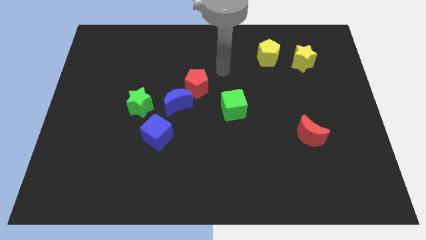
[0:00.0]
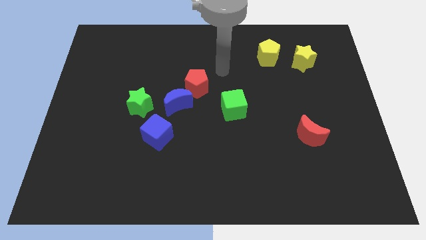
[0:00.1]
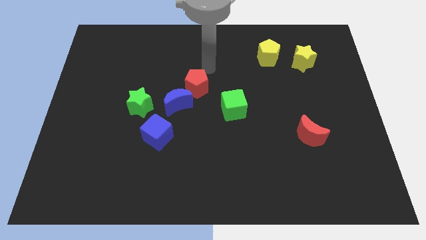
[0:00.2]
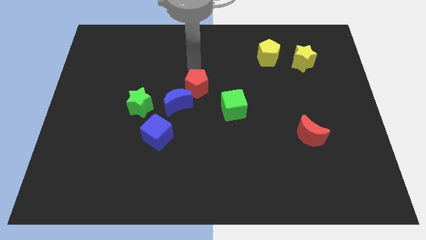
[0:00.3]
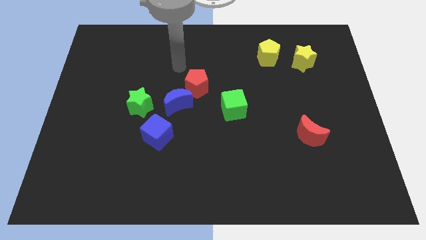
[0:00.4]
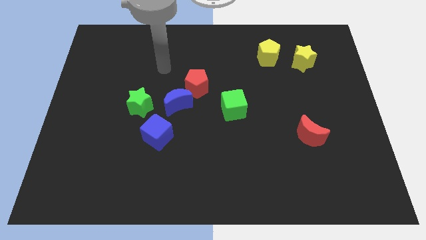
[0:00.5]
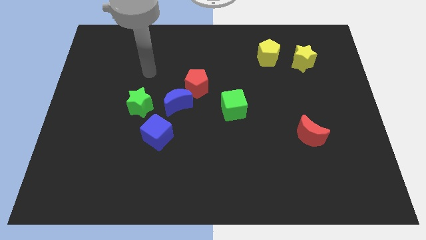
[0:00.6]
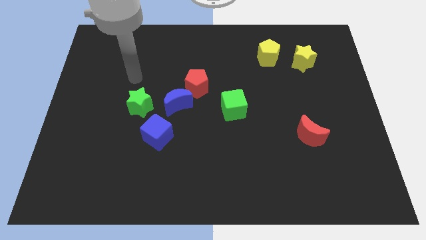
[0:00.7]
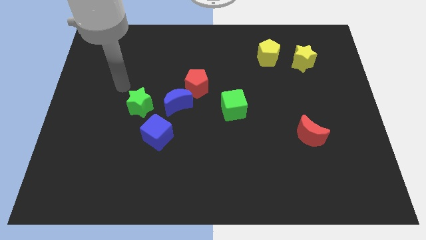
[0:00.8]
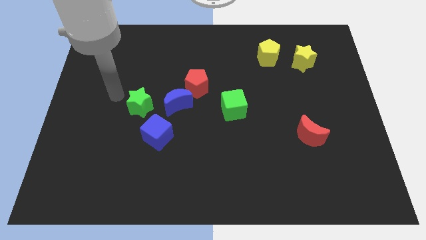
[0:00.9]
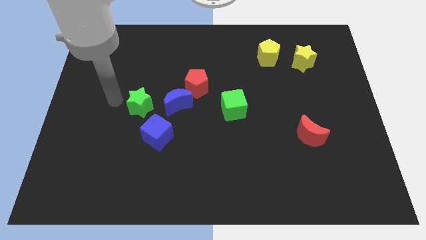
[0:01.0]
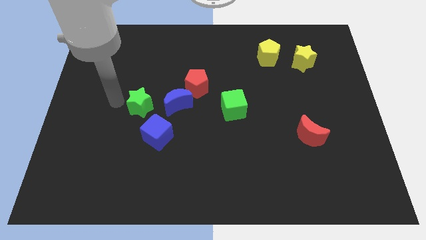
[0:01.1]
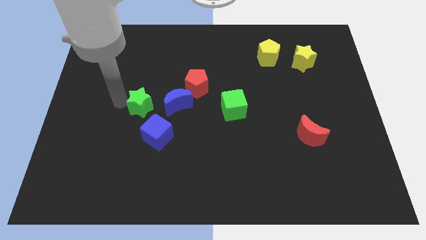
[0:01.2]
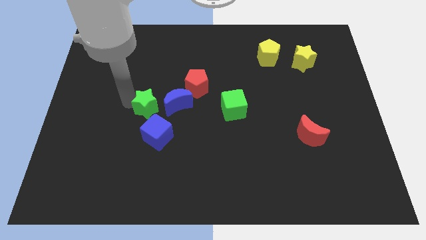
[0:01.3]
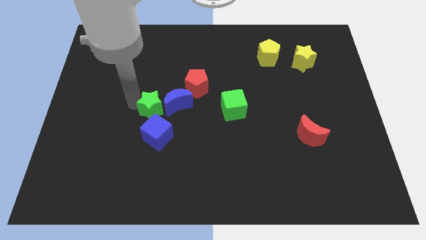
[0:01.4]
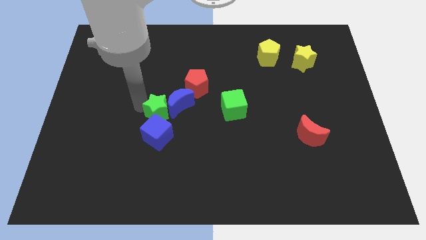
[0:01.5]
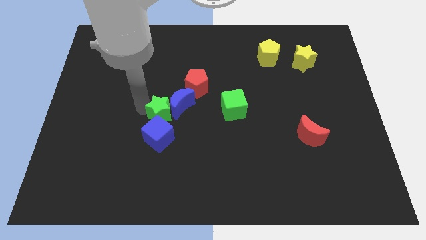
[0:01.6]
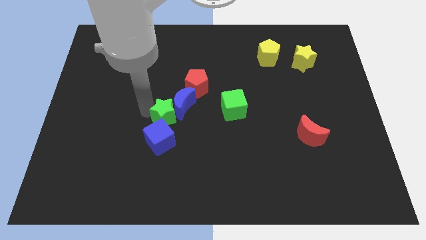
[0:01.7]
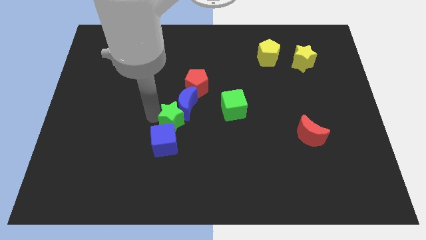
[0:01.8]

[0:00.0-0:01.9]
push the green star between the blue moon and blue cube

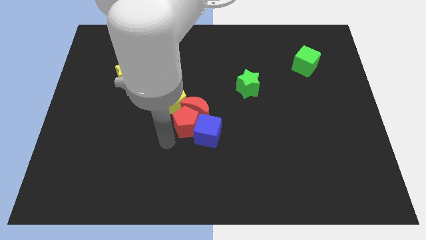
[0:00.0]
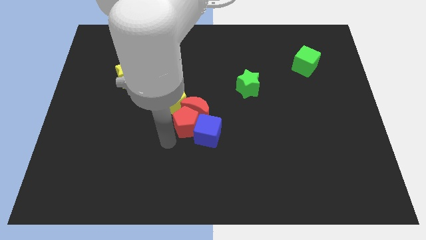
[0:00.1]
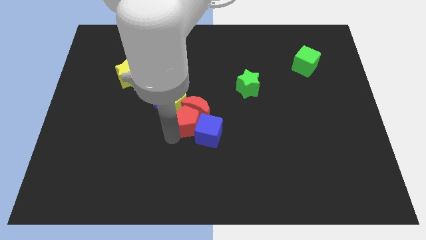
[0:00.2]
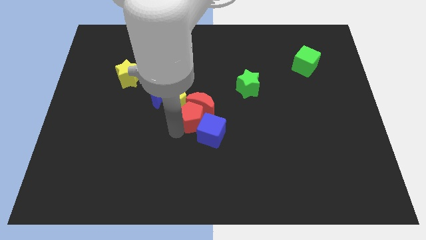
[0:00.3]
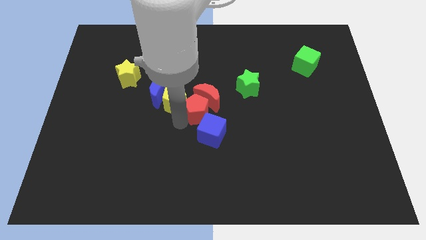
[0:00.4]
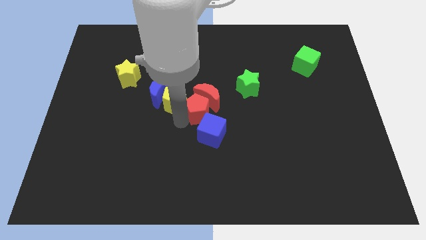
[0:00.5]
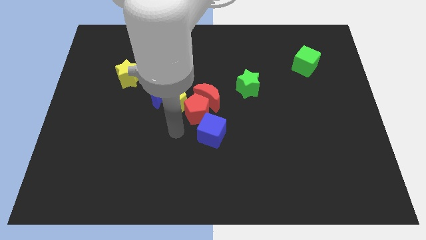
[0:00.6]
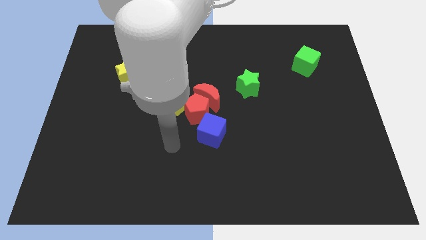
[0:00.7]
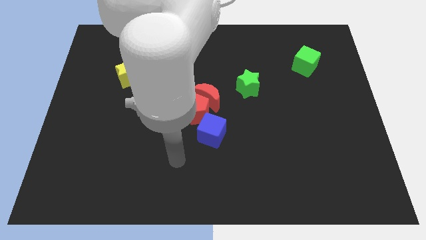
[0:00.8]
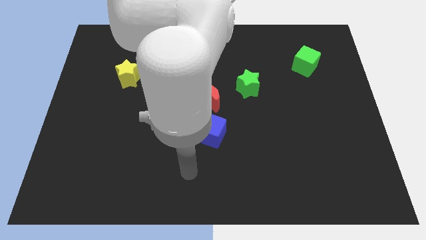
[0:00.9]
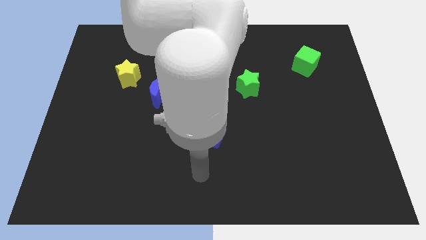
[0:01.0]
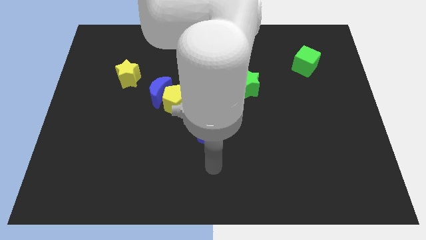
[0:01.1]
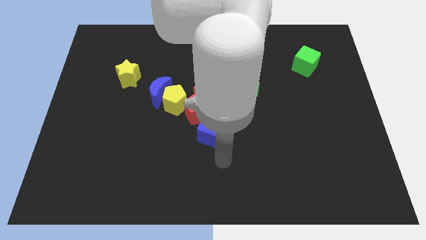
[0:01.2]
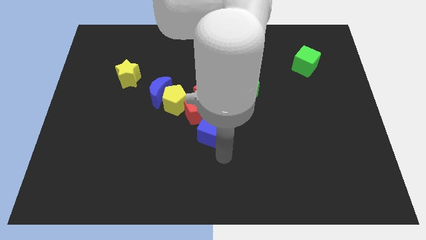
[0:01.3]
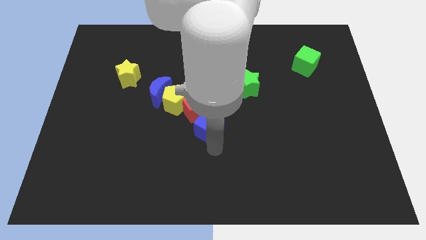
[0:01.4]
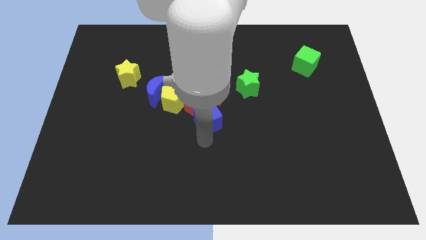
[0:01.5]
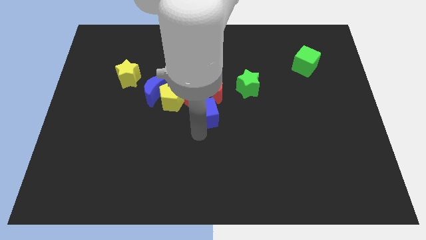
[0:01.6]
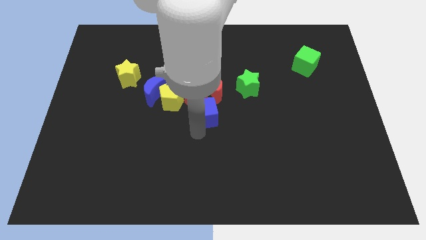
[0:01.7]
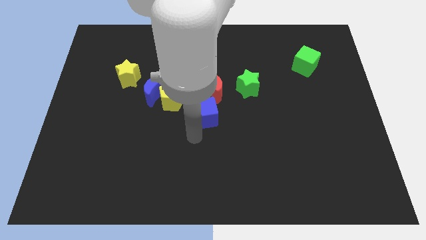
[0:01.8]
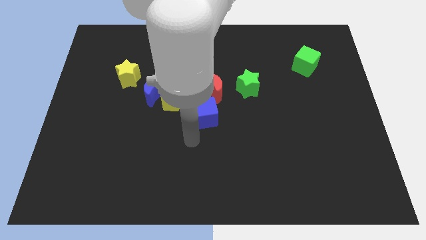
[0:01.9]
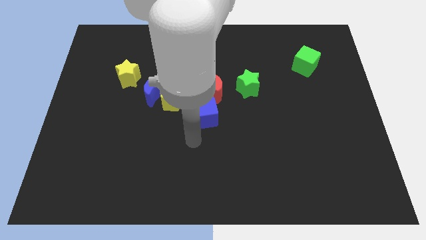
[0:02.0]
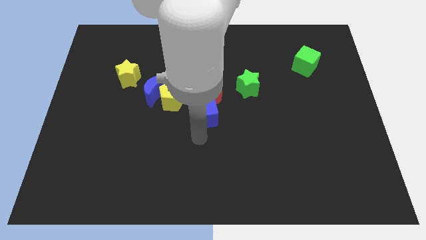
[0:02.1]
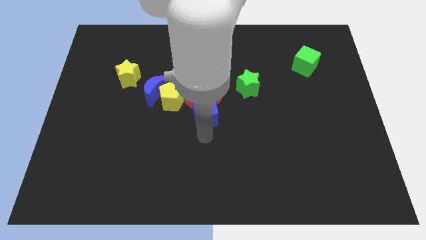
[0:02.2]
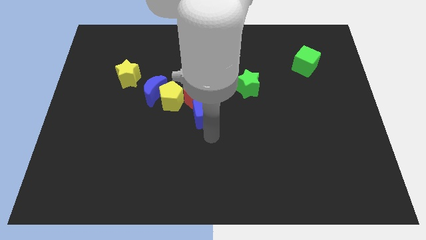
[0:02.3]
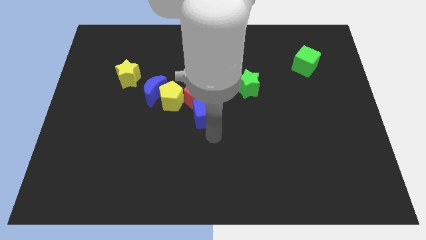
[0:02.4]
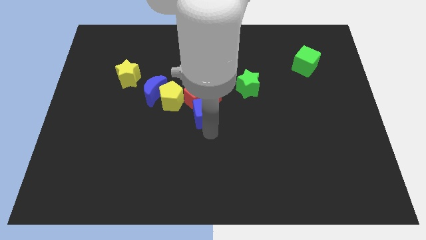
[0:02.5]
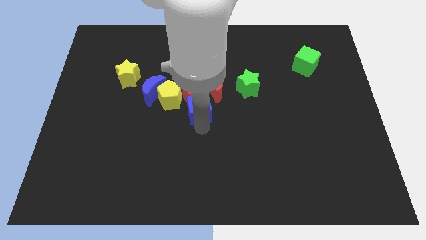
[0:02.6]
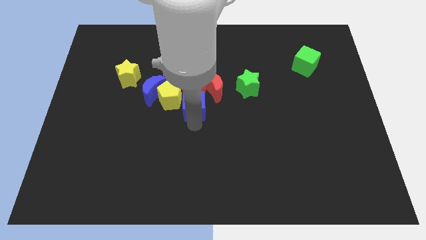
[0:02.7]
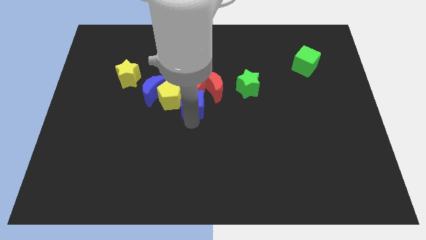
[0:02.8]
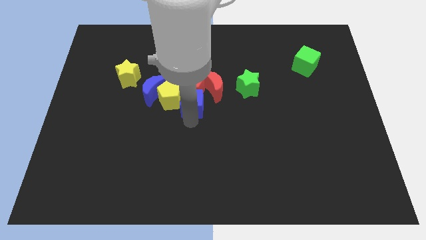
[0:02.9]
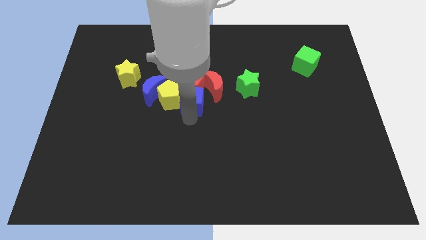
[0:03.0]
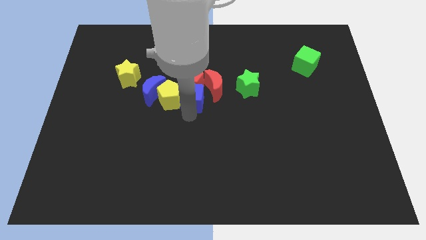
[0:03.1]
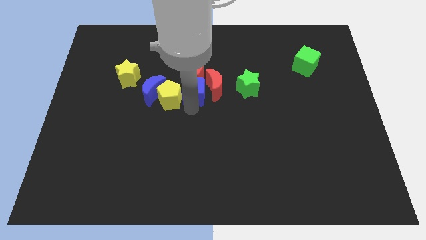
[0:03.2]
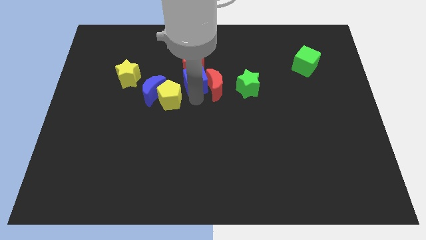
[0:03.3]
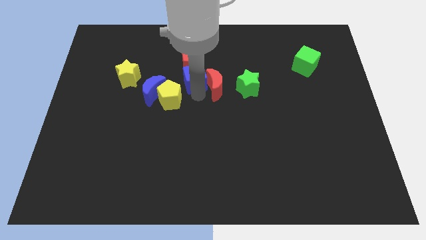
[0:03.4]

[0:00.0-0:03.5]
move the blue cube and the red pentagon slightly towards top

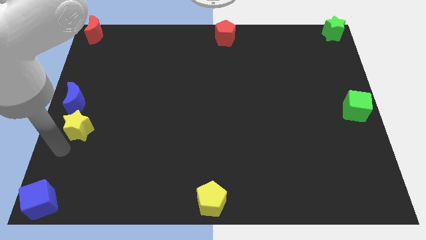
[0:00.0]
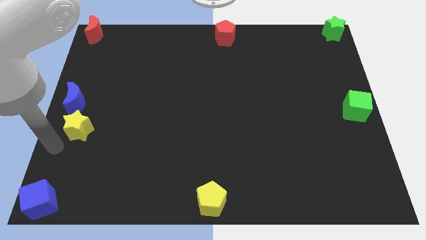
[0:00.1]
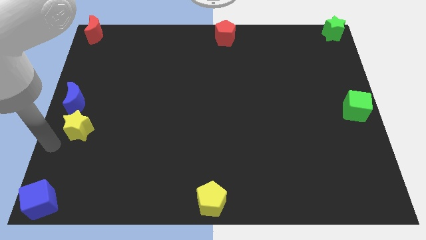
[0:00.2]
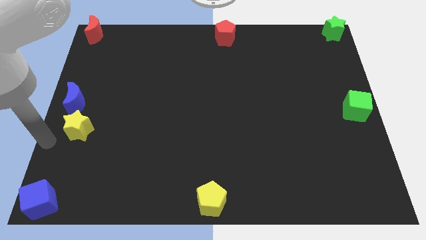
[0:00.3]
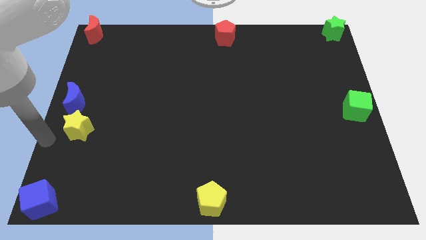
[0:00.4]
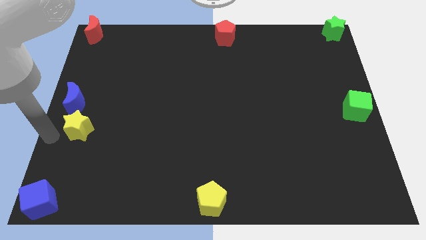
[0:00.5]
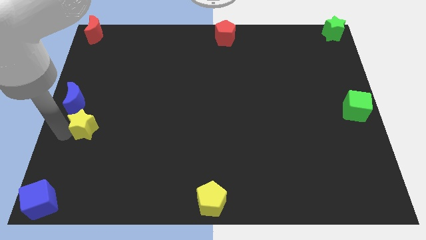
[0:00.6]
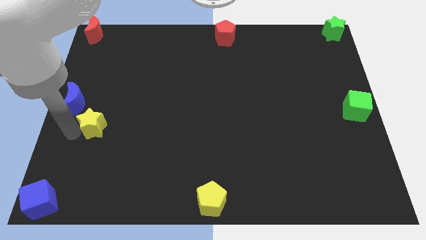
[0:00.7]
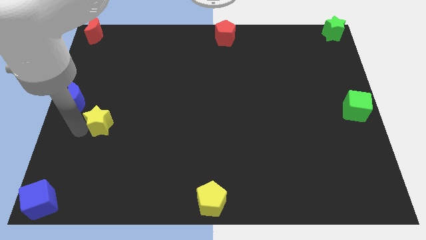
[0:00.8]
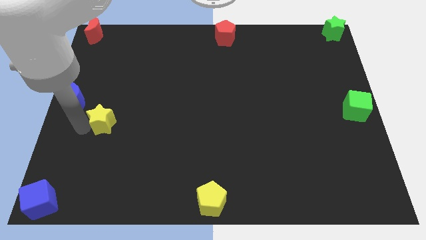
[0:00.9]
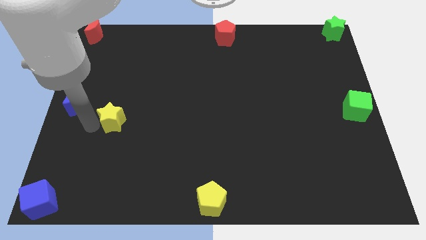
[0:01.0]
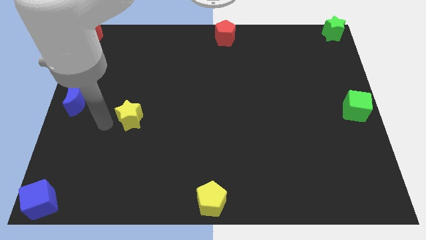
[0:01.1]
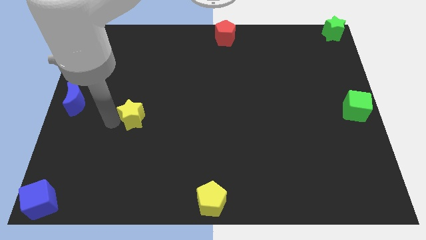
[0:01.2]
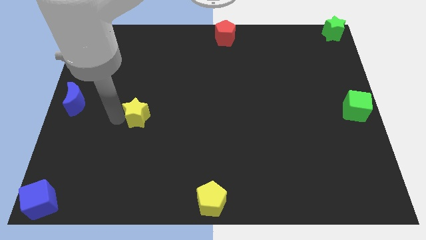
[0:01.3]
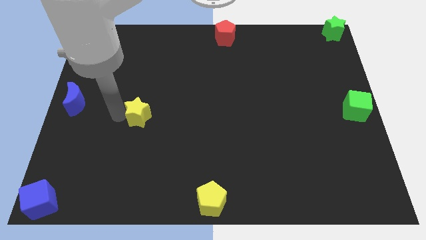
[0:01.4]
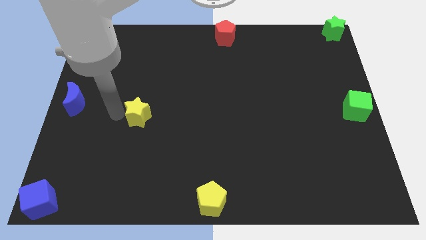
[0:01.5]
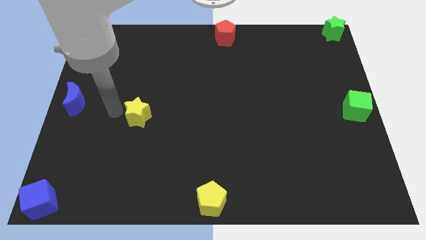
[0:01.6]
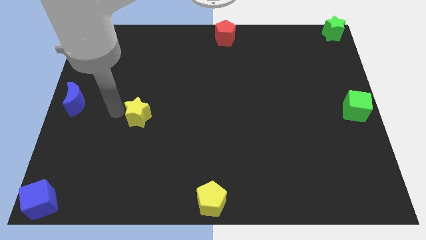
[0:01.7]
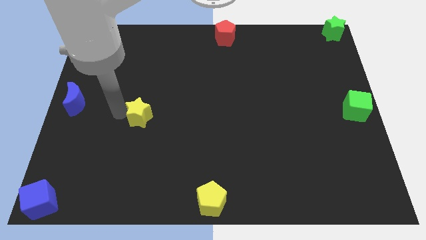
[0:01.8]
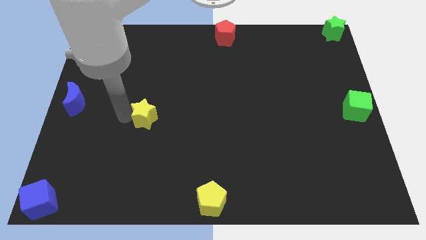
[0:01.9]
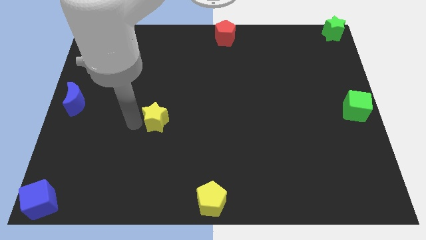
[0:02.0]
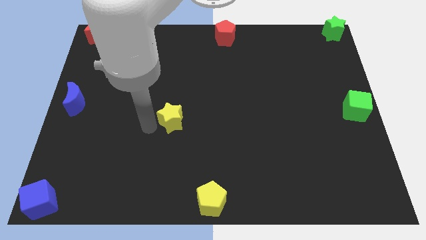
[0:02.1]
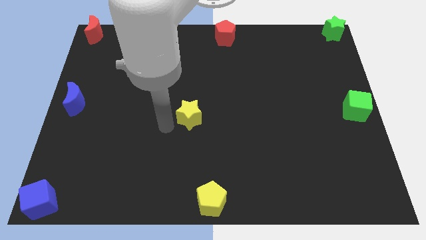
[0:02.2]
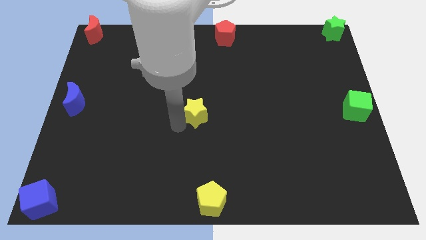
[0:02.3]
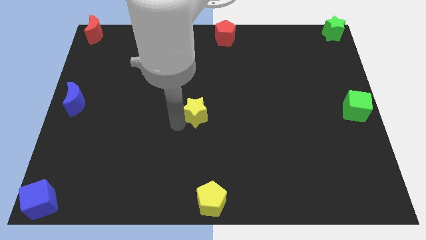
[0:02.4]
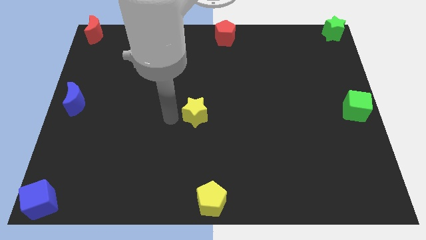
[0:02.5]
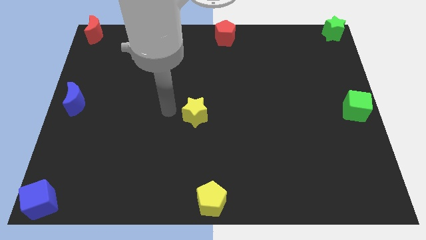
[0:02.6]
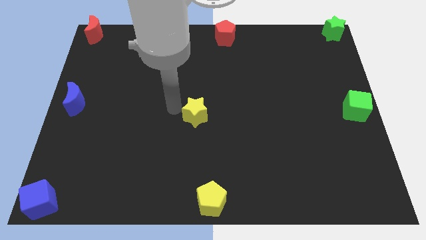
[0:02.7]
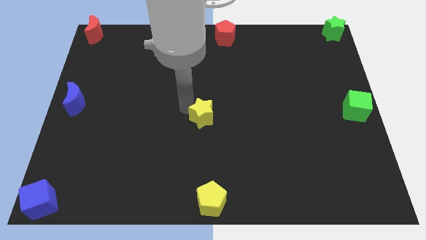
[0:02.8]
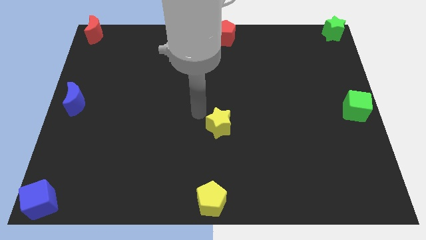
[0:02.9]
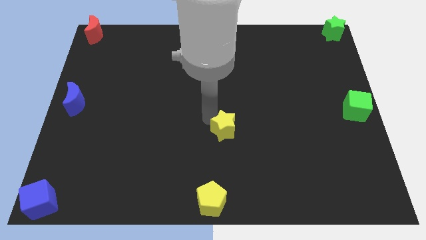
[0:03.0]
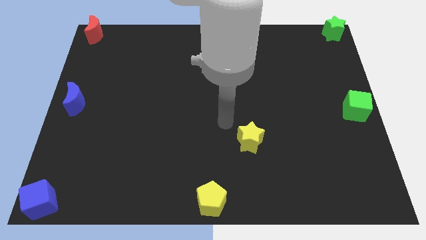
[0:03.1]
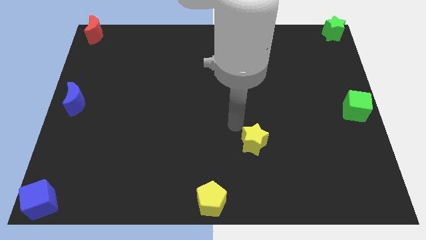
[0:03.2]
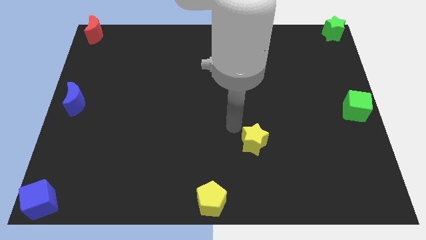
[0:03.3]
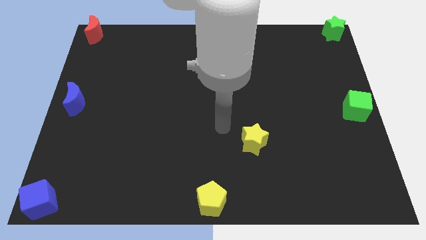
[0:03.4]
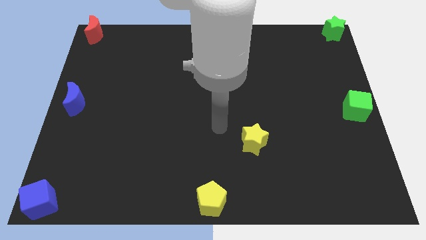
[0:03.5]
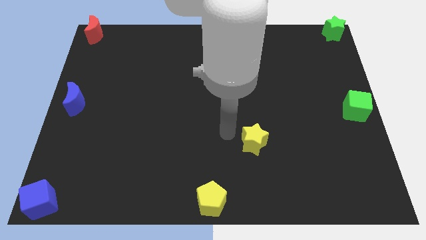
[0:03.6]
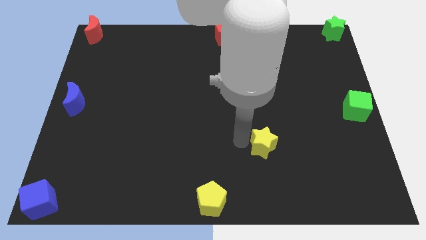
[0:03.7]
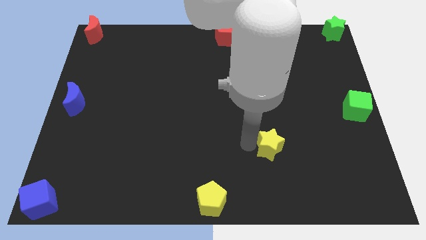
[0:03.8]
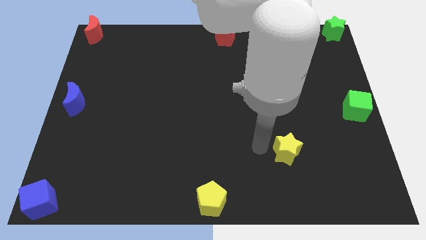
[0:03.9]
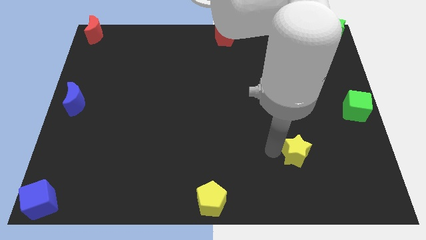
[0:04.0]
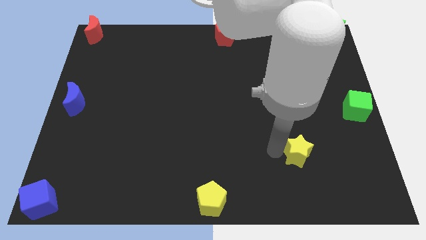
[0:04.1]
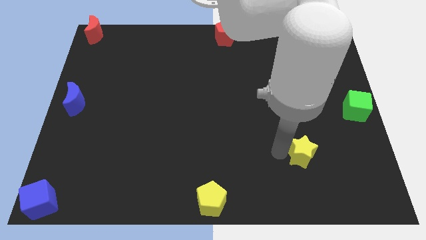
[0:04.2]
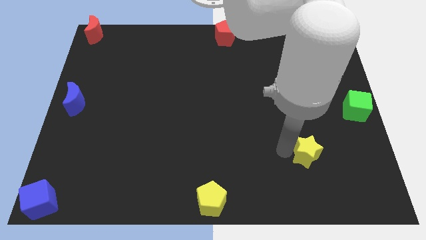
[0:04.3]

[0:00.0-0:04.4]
move the yellow star towards right
